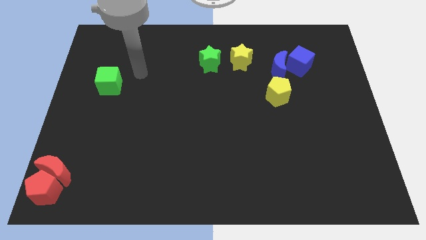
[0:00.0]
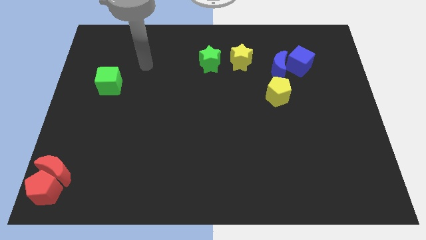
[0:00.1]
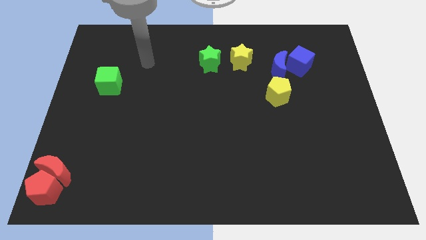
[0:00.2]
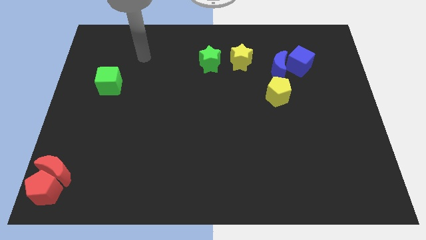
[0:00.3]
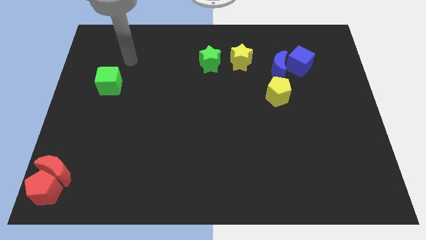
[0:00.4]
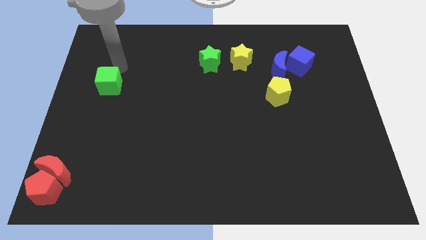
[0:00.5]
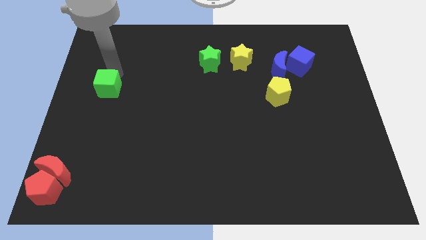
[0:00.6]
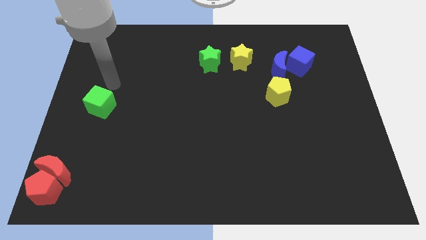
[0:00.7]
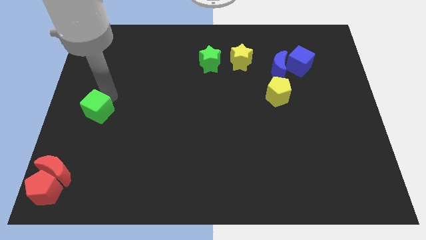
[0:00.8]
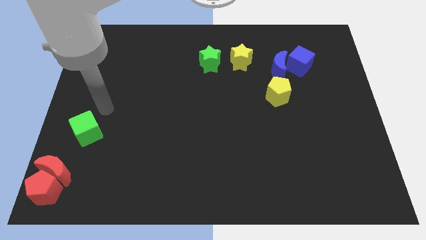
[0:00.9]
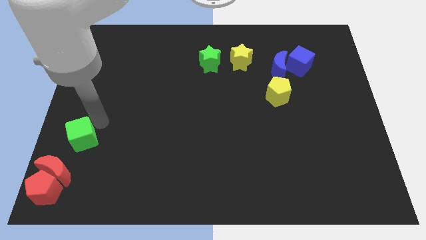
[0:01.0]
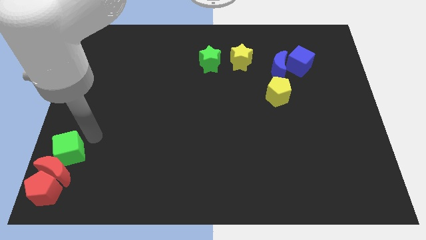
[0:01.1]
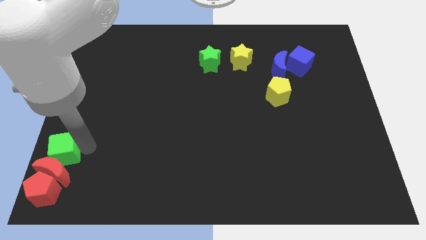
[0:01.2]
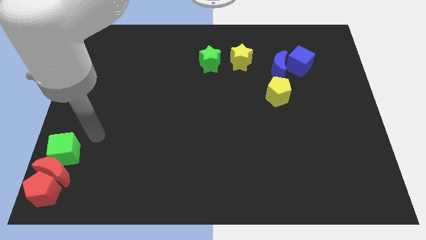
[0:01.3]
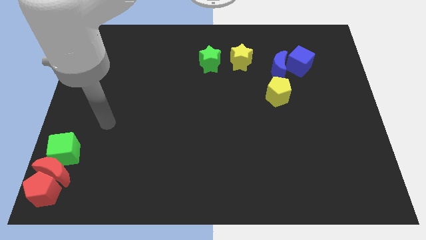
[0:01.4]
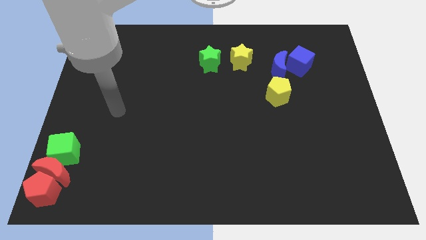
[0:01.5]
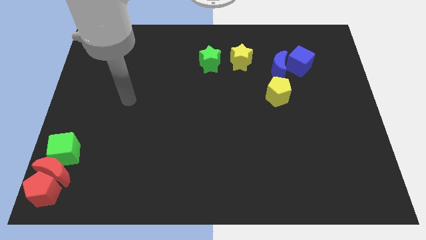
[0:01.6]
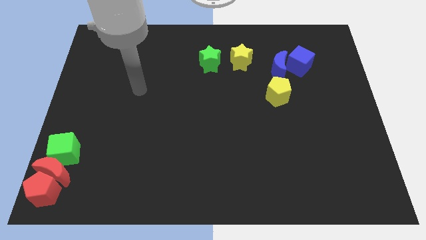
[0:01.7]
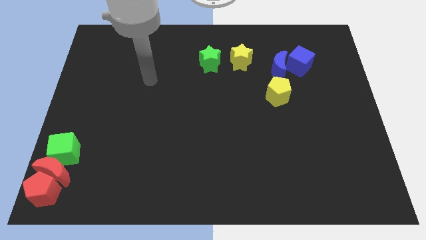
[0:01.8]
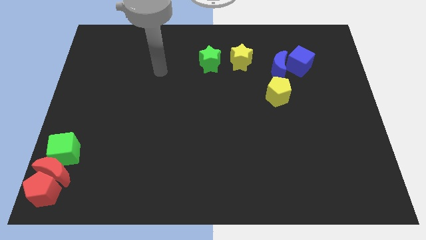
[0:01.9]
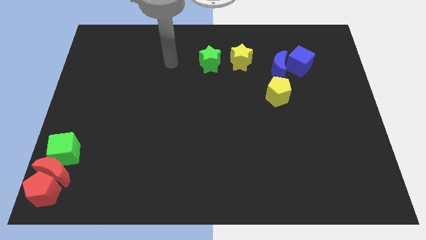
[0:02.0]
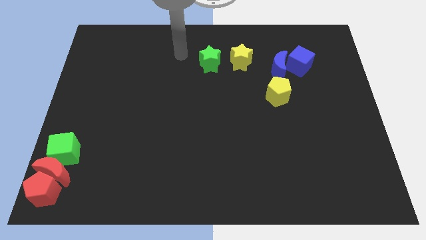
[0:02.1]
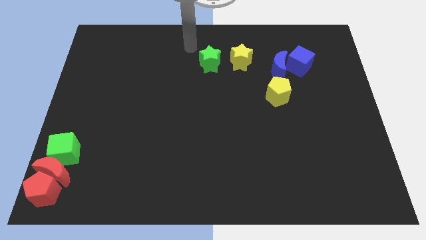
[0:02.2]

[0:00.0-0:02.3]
place the green cube above the red moon

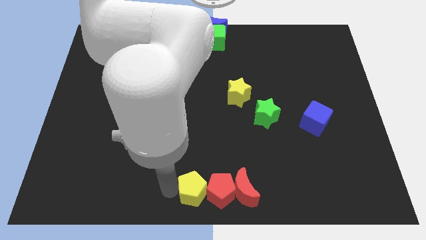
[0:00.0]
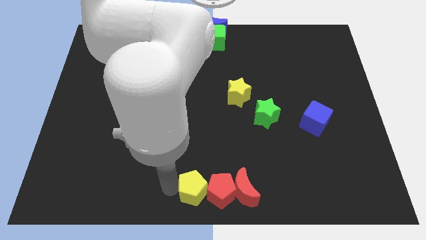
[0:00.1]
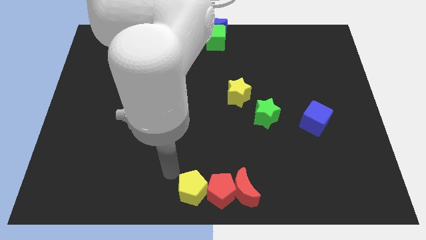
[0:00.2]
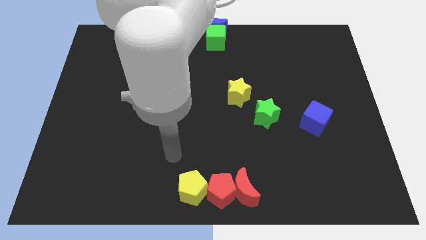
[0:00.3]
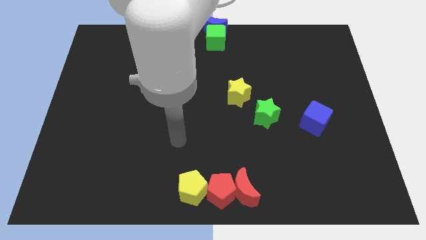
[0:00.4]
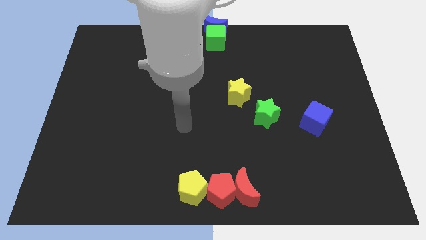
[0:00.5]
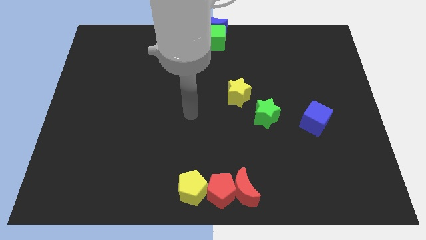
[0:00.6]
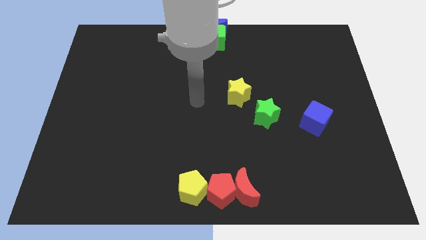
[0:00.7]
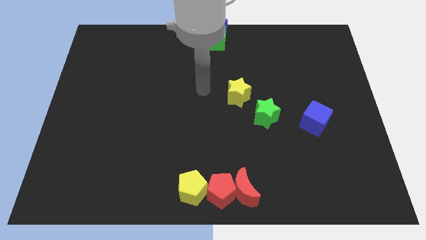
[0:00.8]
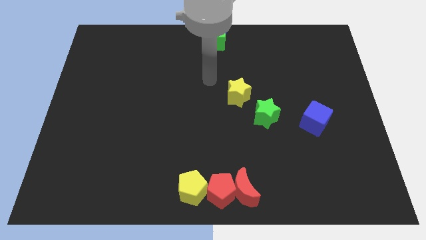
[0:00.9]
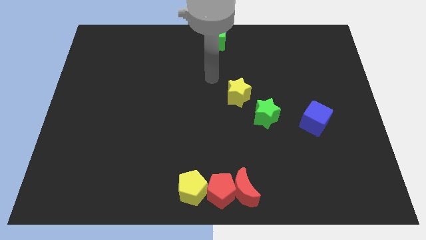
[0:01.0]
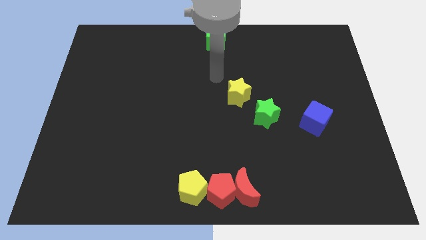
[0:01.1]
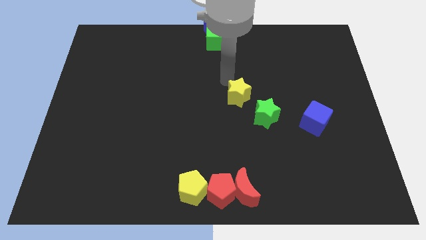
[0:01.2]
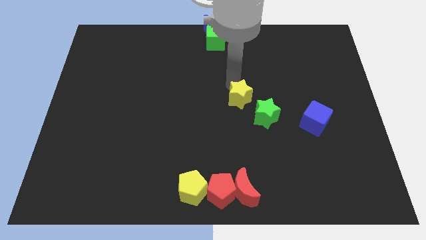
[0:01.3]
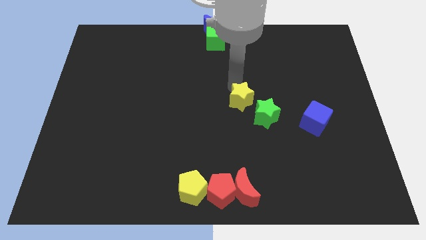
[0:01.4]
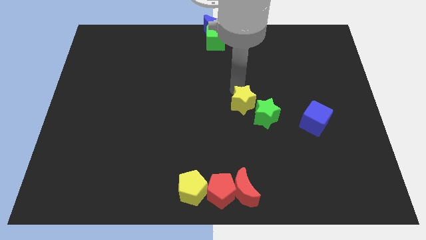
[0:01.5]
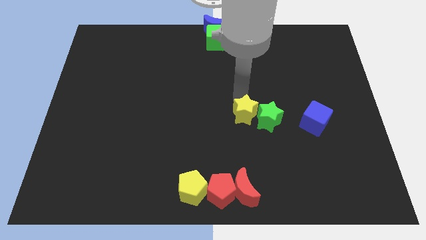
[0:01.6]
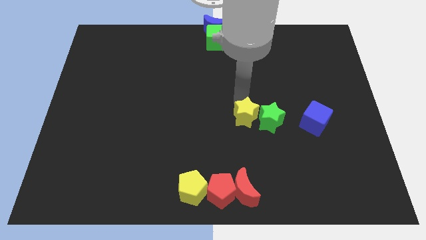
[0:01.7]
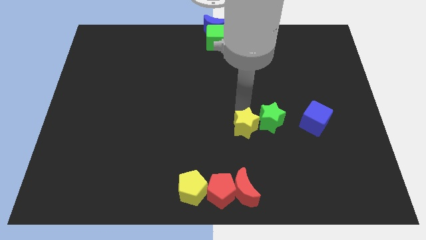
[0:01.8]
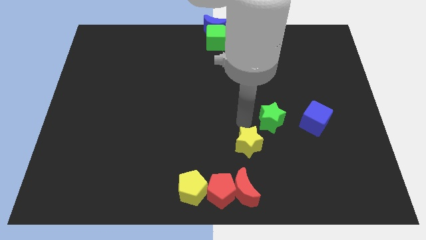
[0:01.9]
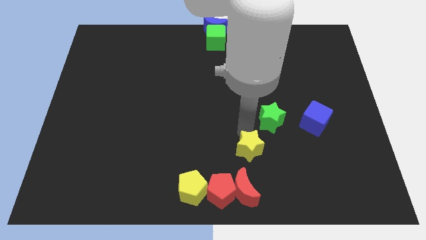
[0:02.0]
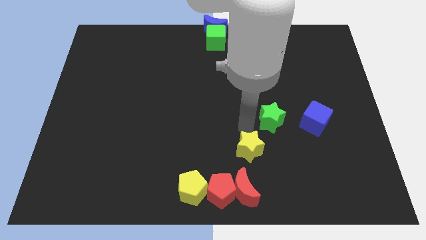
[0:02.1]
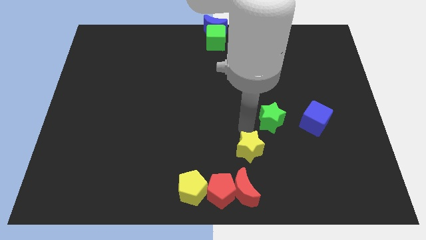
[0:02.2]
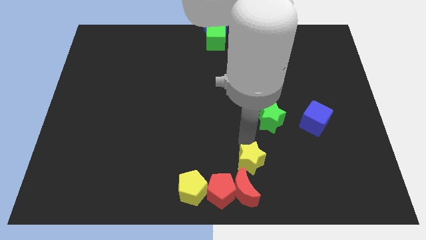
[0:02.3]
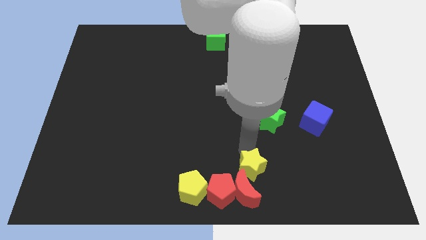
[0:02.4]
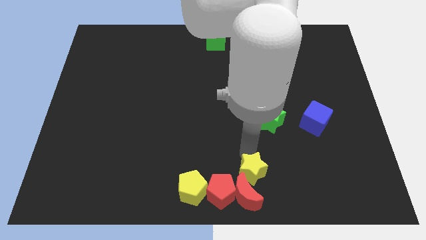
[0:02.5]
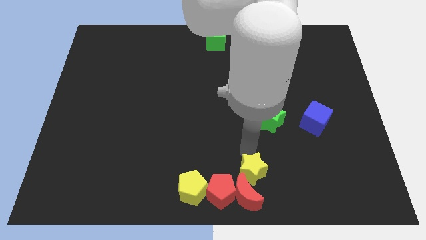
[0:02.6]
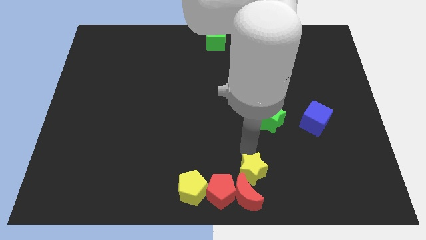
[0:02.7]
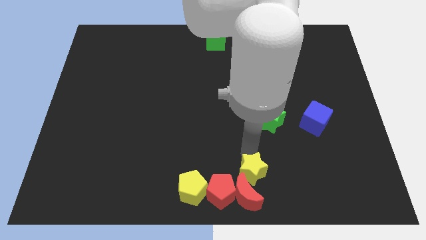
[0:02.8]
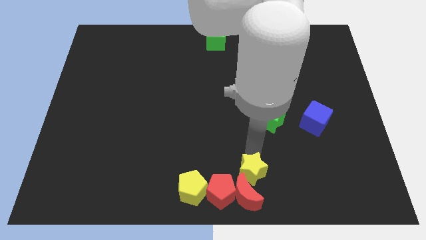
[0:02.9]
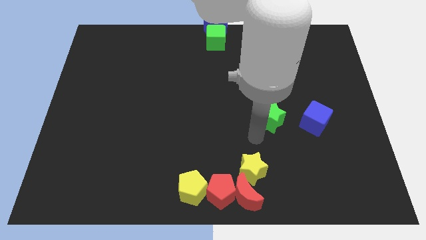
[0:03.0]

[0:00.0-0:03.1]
push yellow star on top of red moon

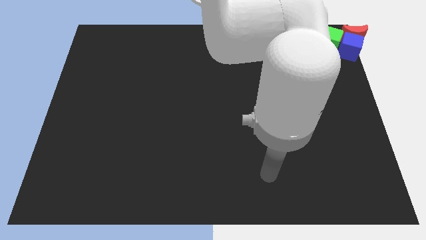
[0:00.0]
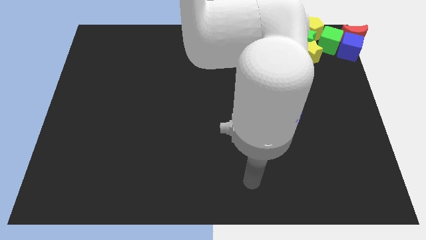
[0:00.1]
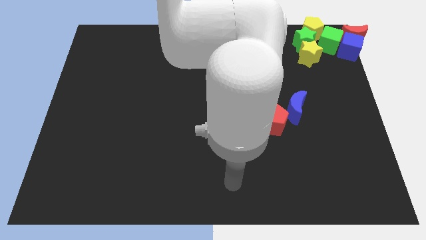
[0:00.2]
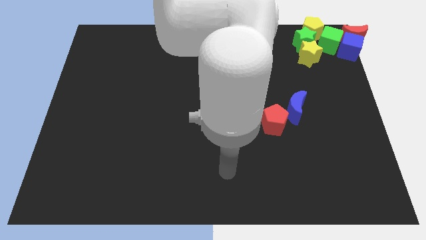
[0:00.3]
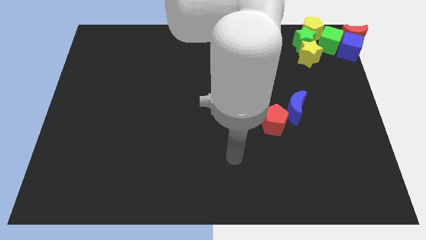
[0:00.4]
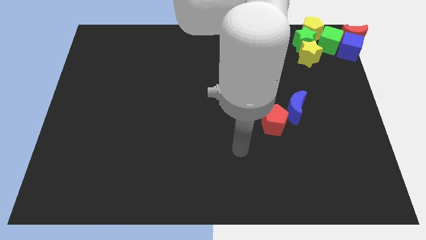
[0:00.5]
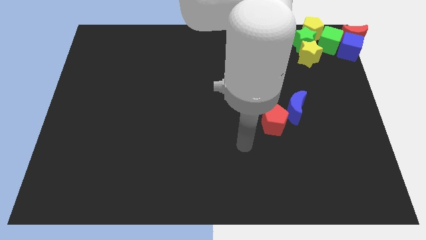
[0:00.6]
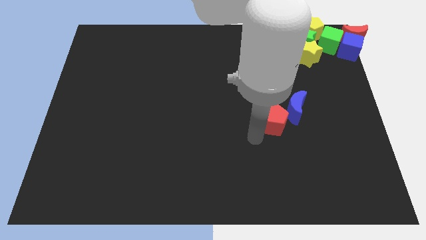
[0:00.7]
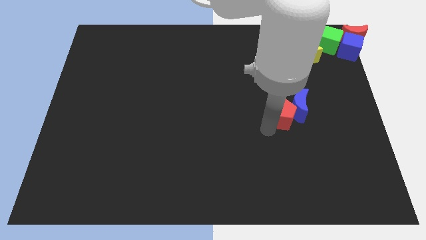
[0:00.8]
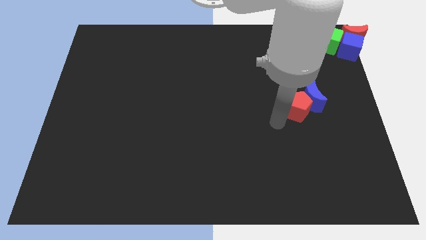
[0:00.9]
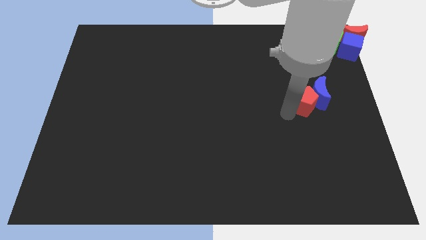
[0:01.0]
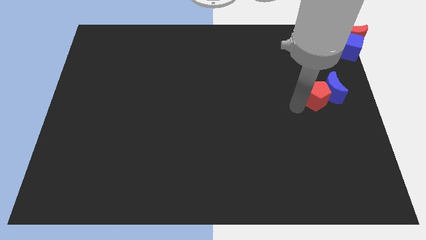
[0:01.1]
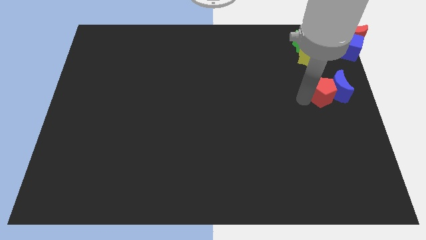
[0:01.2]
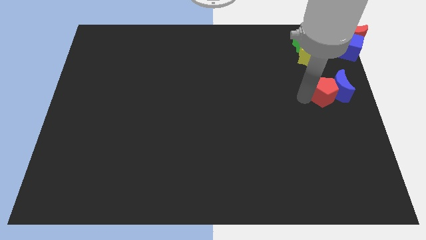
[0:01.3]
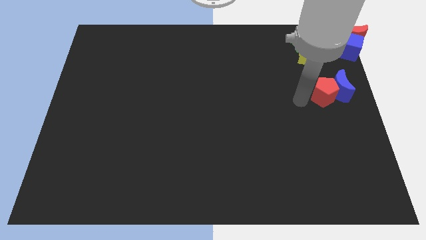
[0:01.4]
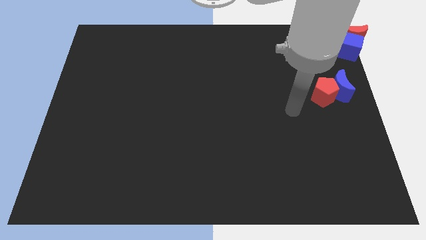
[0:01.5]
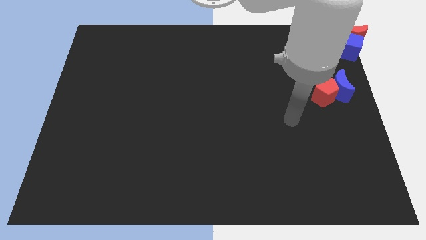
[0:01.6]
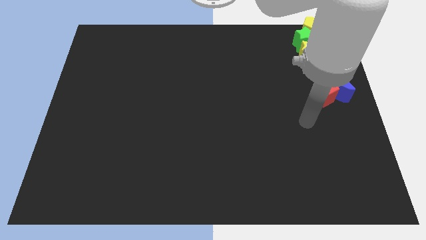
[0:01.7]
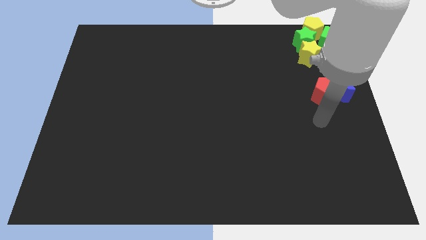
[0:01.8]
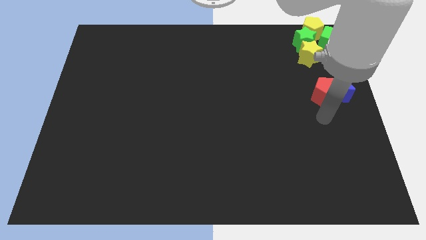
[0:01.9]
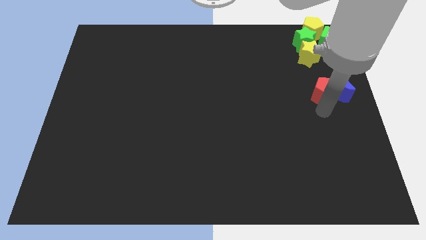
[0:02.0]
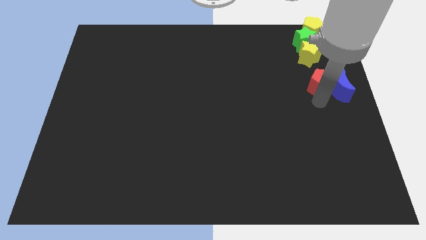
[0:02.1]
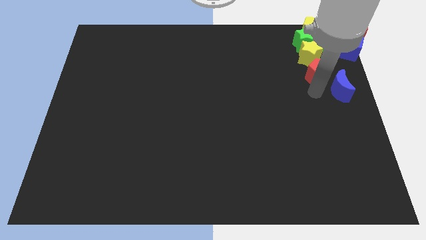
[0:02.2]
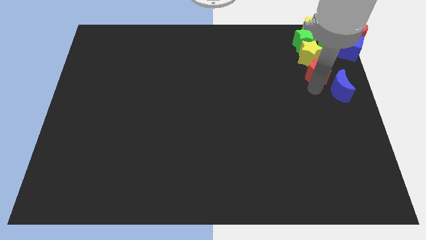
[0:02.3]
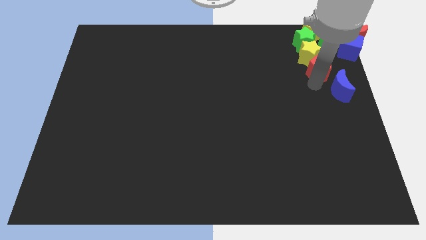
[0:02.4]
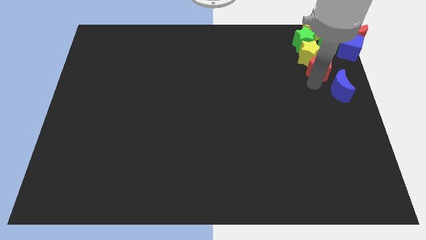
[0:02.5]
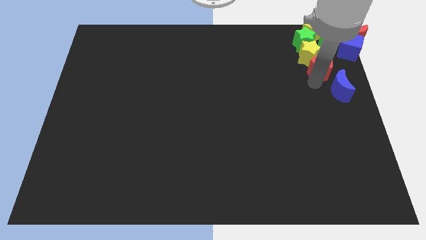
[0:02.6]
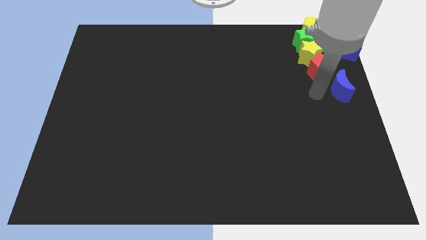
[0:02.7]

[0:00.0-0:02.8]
move red pentagon to the bottom of the yellow star

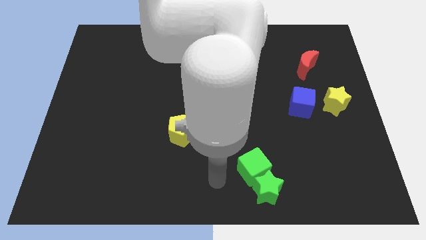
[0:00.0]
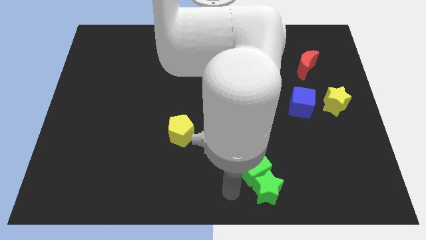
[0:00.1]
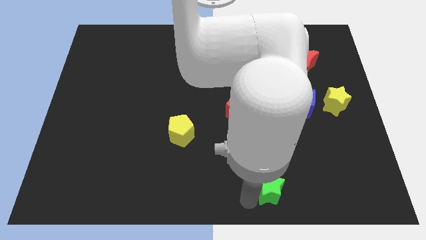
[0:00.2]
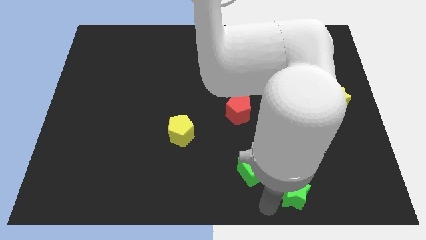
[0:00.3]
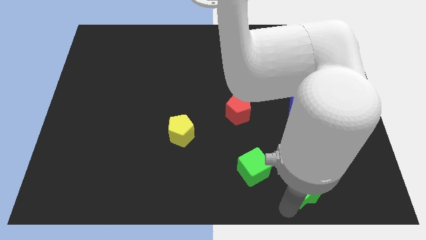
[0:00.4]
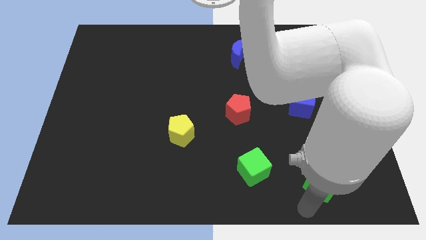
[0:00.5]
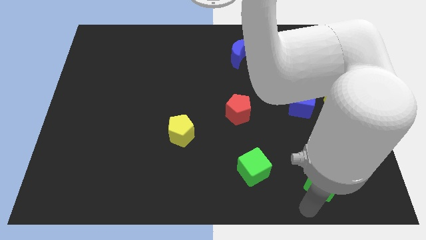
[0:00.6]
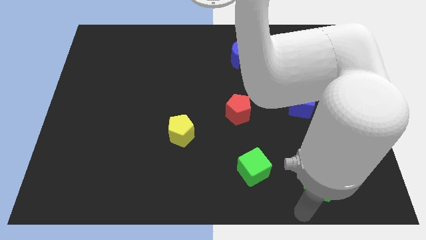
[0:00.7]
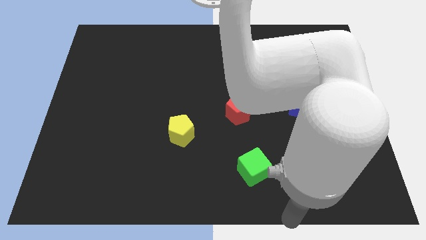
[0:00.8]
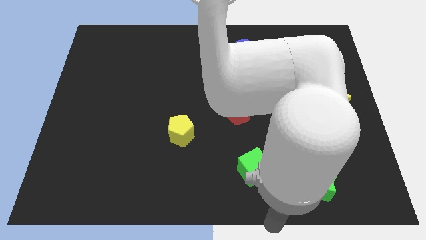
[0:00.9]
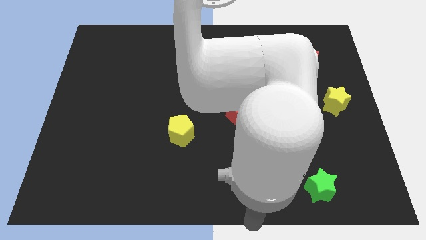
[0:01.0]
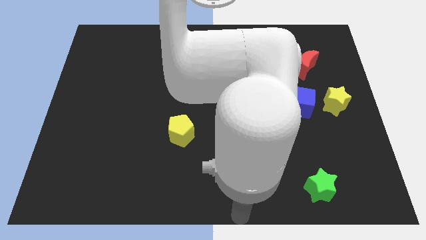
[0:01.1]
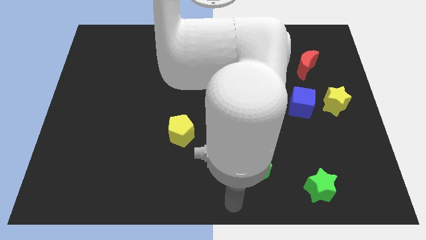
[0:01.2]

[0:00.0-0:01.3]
separate the green star from green cube
